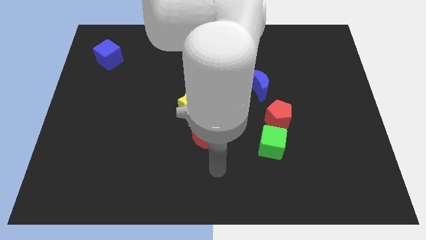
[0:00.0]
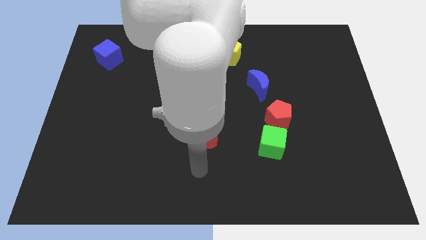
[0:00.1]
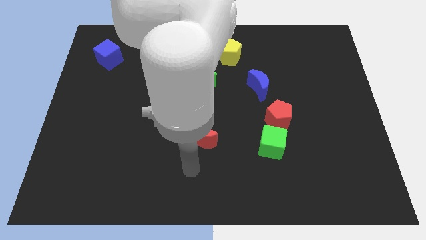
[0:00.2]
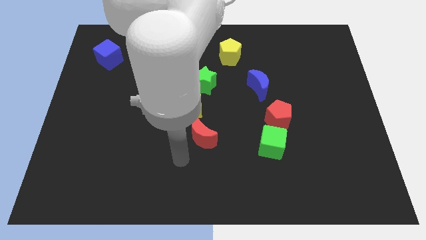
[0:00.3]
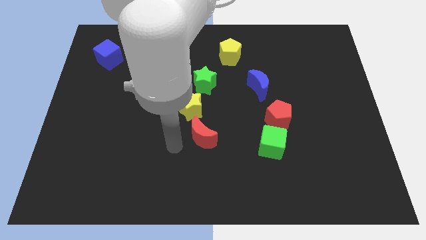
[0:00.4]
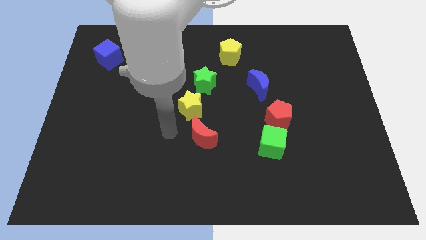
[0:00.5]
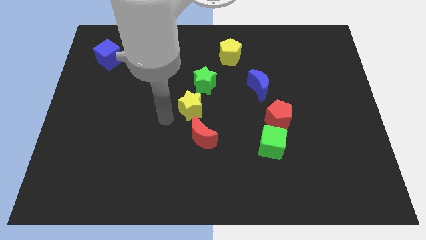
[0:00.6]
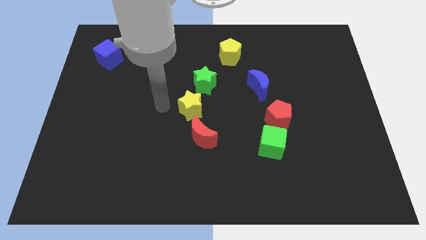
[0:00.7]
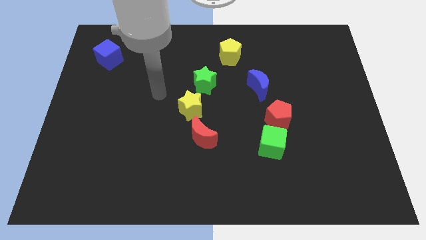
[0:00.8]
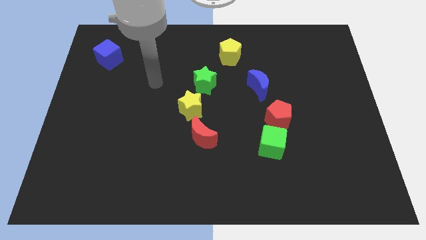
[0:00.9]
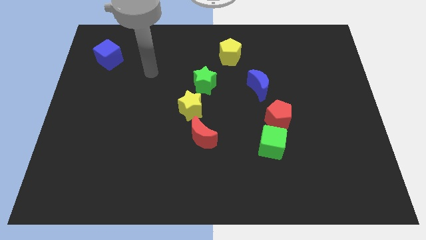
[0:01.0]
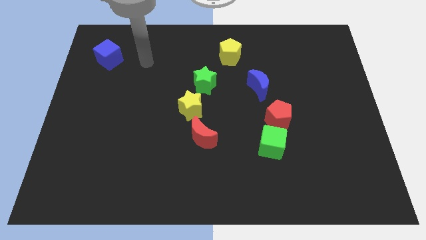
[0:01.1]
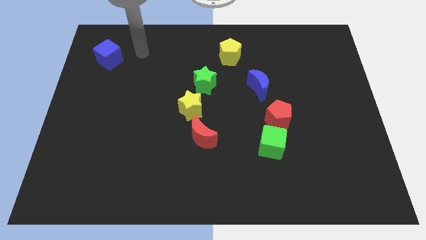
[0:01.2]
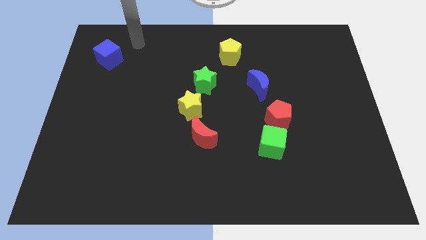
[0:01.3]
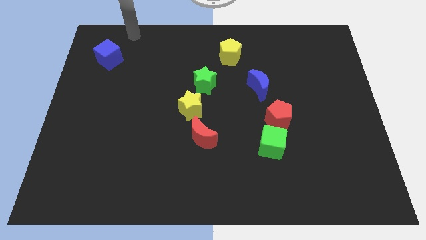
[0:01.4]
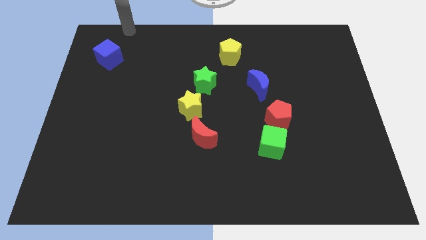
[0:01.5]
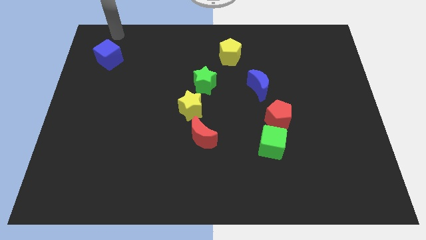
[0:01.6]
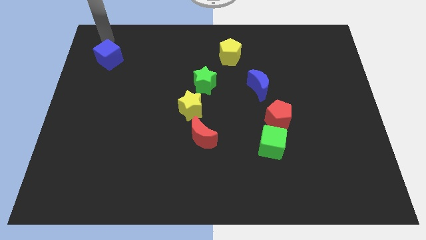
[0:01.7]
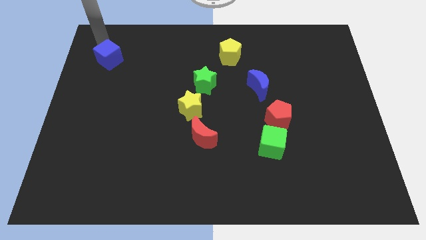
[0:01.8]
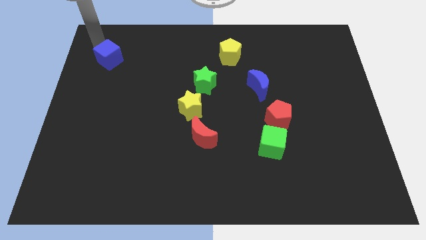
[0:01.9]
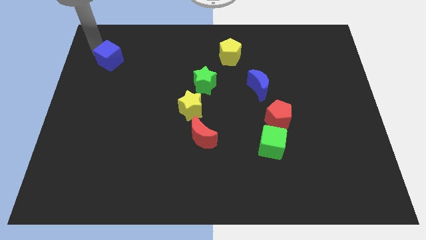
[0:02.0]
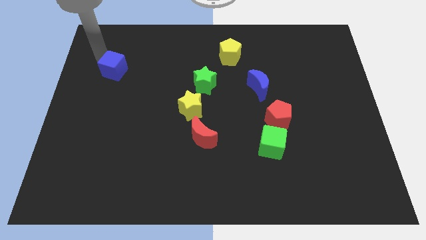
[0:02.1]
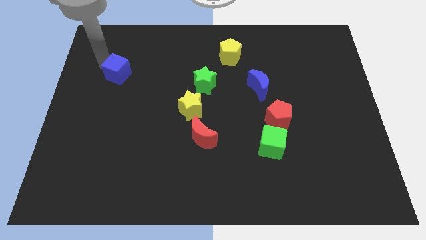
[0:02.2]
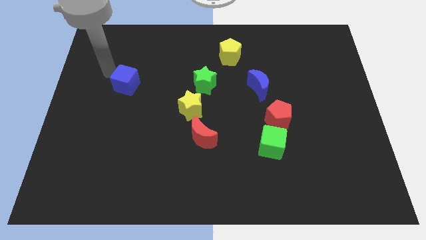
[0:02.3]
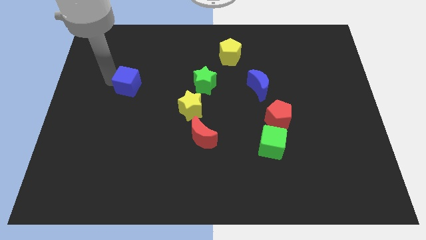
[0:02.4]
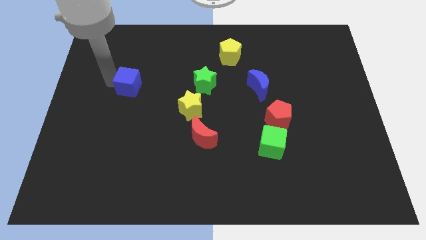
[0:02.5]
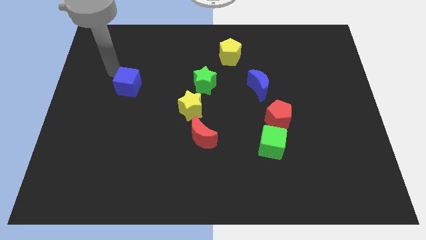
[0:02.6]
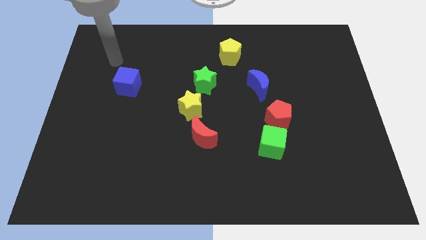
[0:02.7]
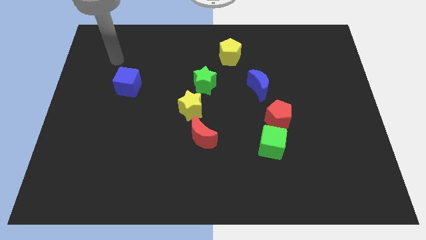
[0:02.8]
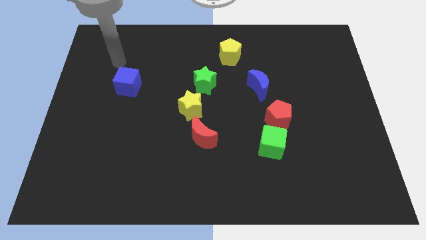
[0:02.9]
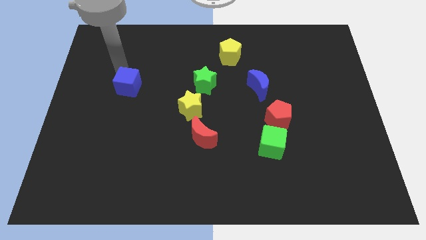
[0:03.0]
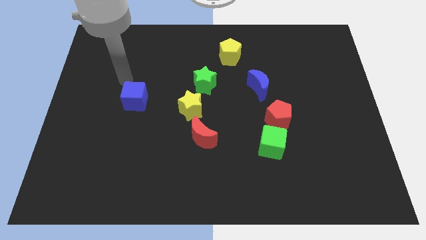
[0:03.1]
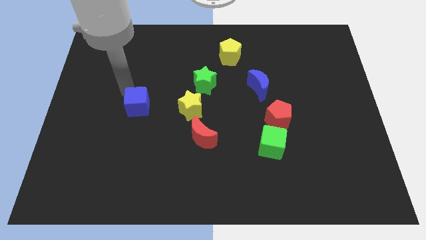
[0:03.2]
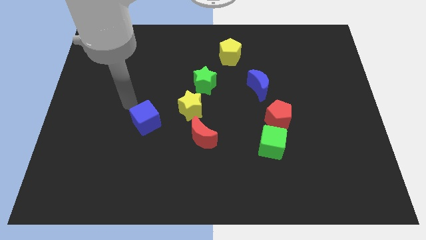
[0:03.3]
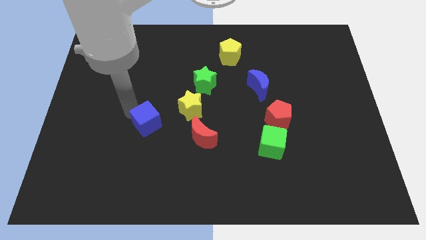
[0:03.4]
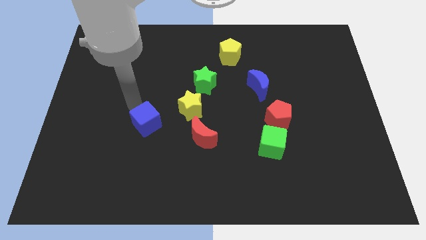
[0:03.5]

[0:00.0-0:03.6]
push the blue cube to the left of the yellow star

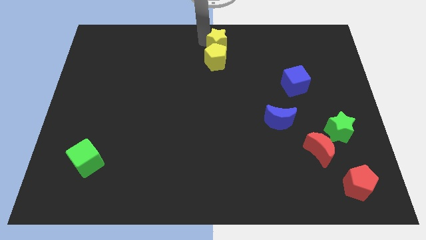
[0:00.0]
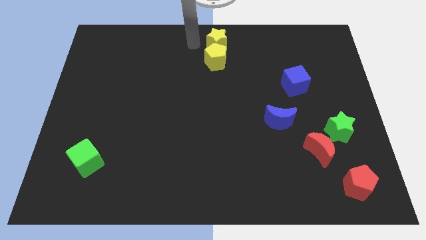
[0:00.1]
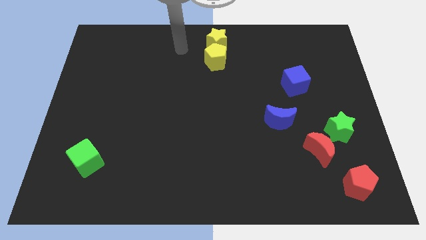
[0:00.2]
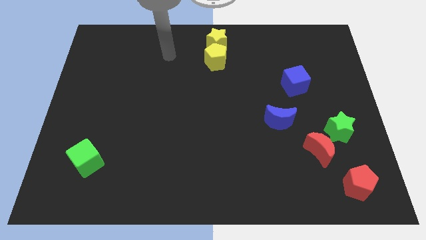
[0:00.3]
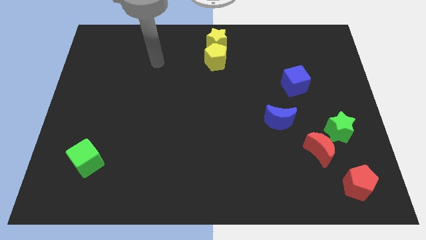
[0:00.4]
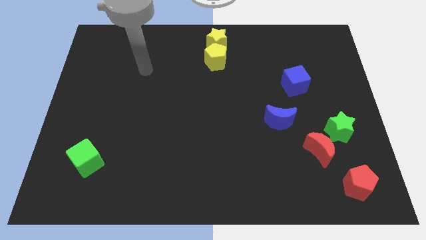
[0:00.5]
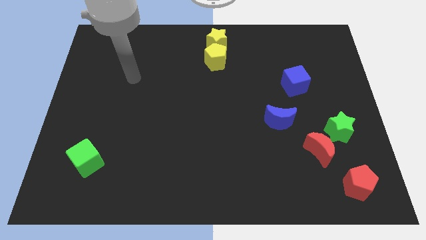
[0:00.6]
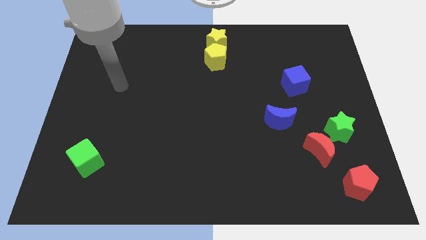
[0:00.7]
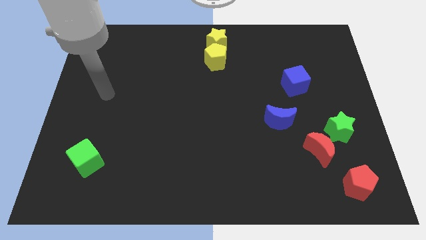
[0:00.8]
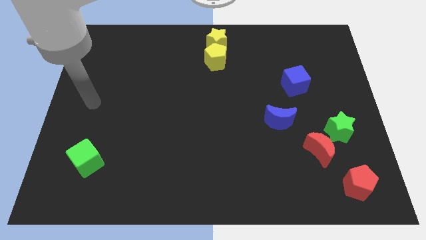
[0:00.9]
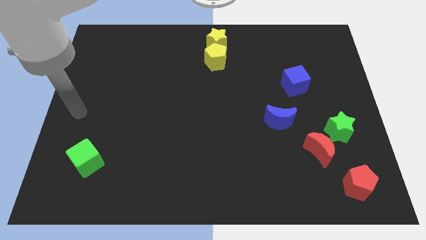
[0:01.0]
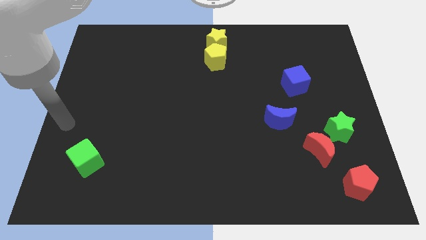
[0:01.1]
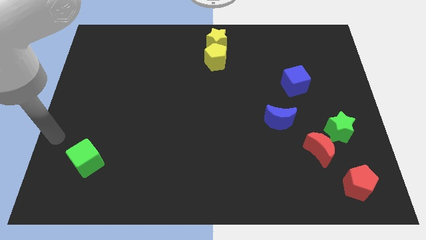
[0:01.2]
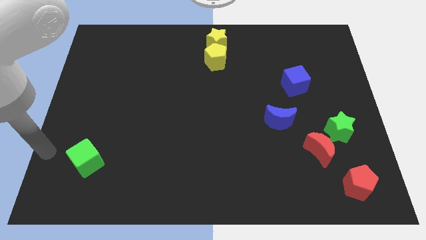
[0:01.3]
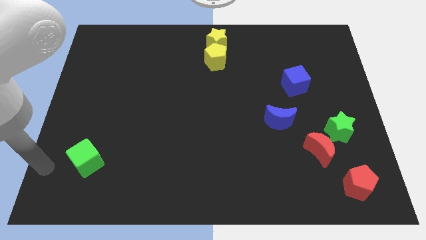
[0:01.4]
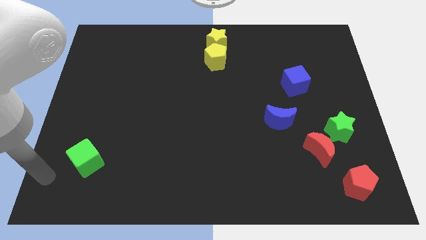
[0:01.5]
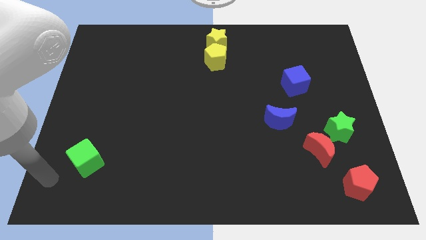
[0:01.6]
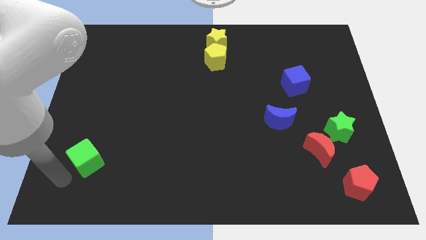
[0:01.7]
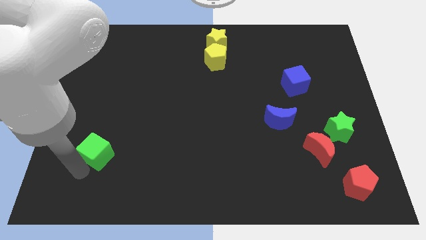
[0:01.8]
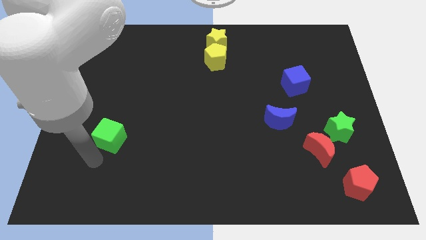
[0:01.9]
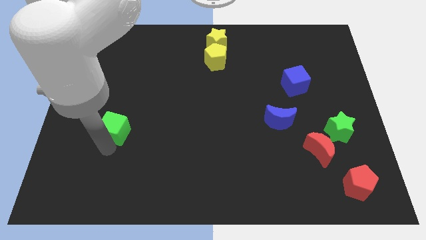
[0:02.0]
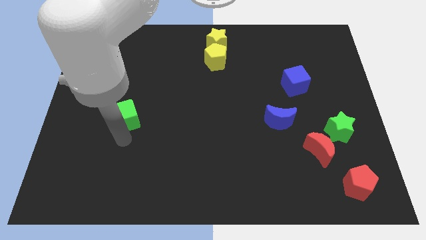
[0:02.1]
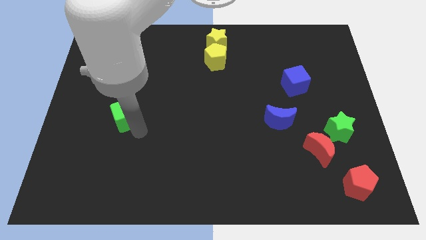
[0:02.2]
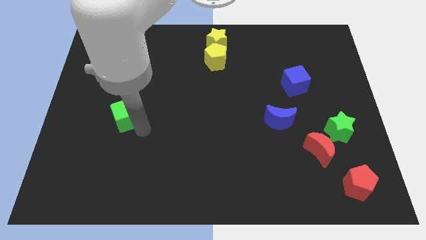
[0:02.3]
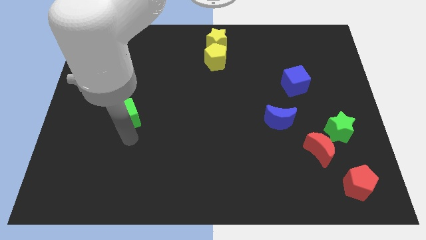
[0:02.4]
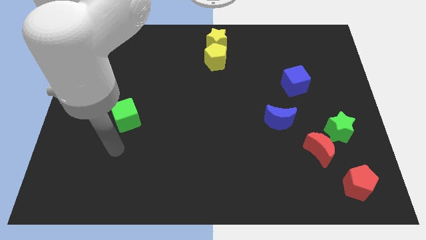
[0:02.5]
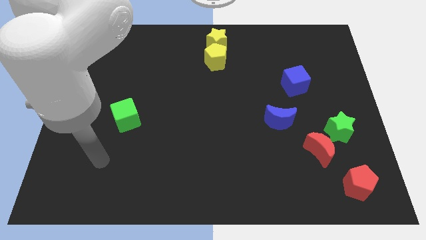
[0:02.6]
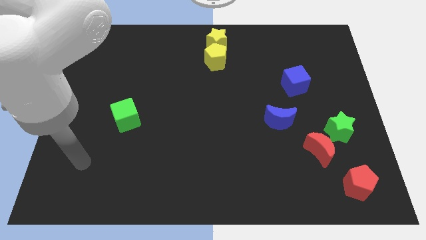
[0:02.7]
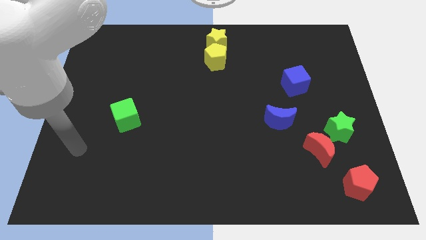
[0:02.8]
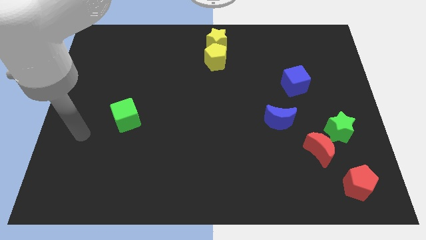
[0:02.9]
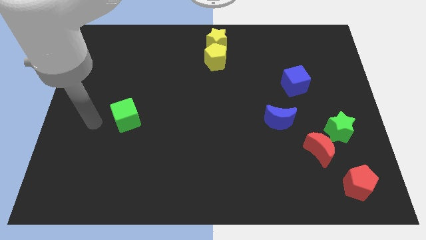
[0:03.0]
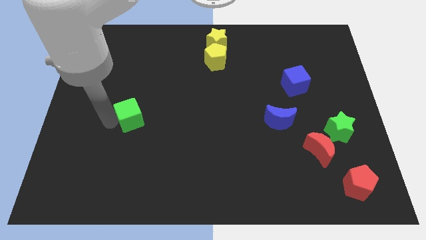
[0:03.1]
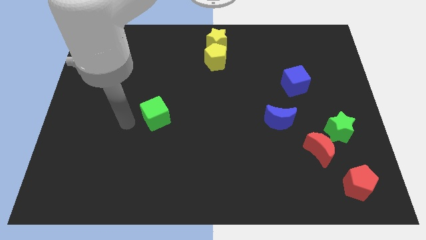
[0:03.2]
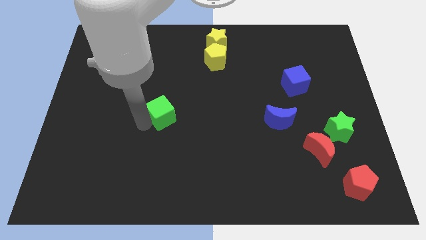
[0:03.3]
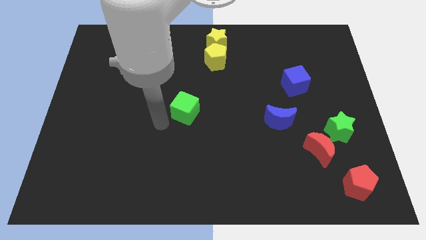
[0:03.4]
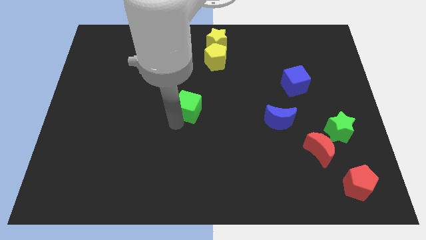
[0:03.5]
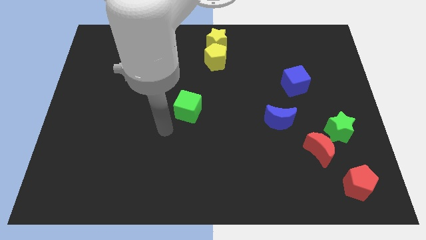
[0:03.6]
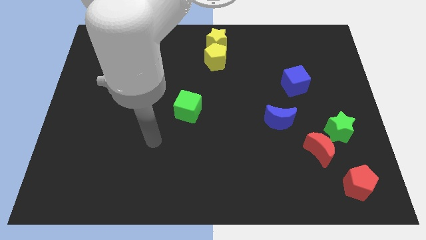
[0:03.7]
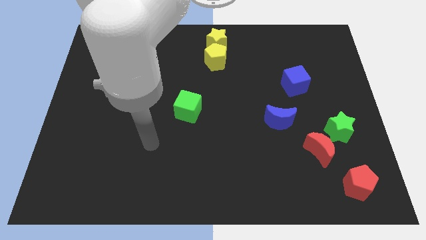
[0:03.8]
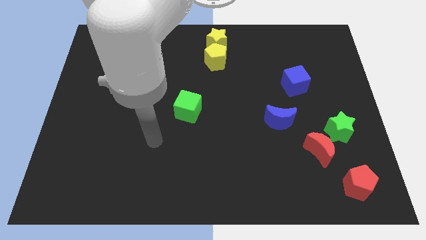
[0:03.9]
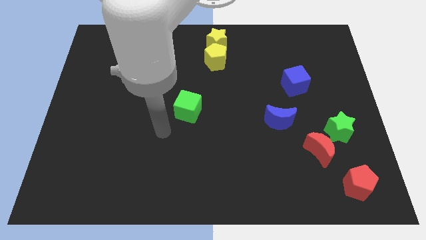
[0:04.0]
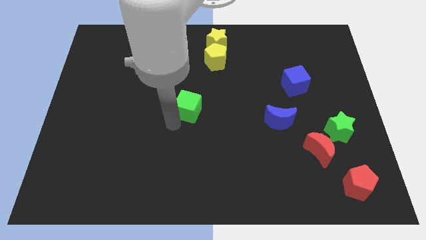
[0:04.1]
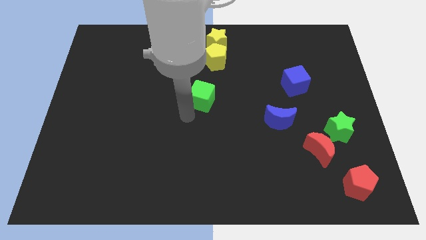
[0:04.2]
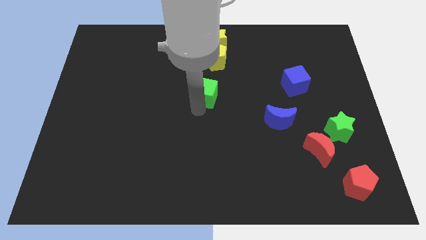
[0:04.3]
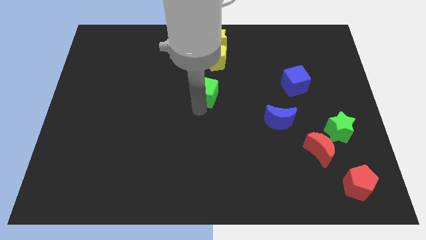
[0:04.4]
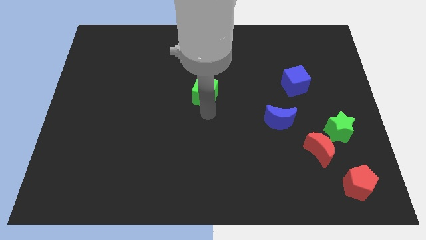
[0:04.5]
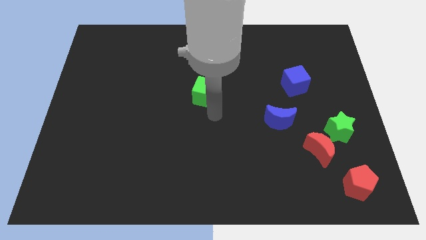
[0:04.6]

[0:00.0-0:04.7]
move the green cube diagonally top left to the blue moon

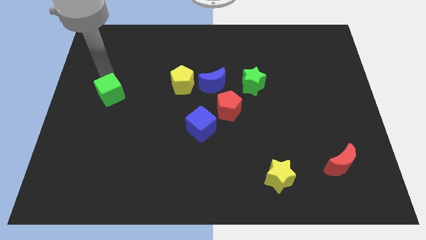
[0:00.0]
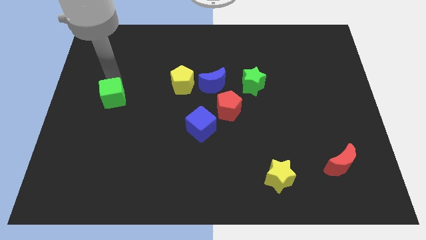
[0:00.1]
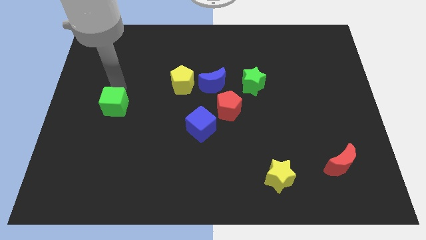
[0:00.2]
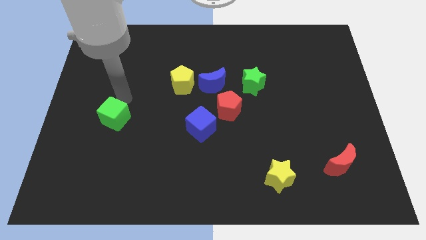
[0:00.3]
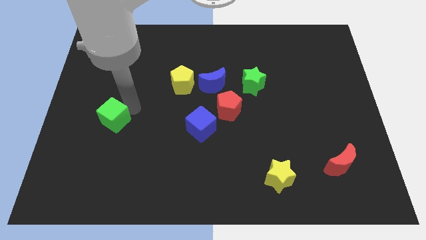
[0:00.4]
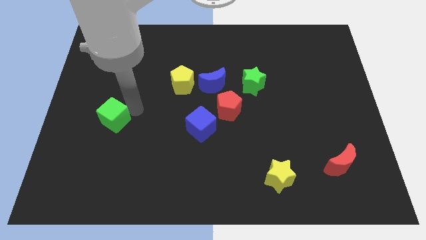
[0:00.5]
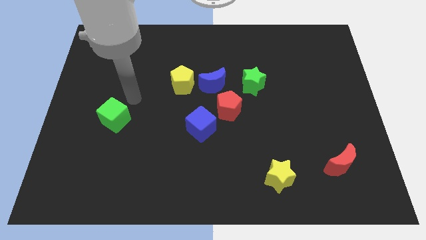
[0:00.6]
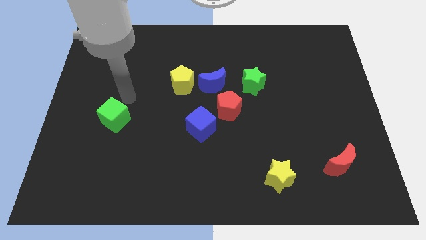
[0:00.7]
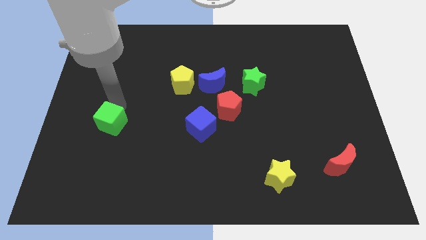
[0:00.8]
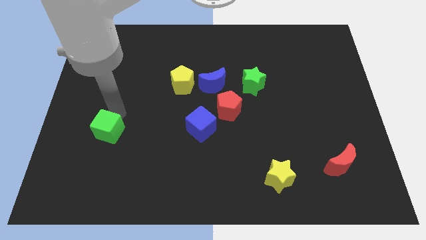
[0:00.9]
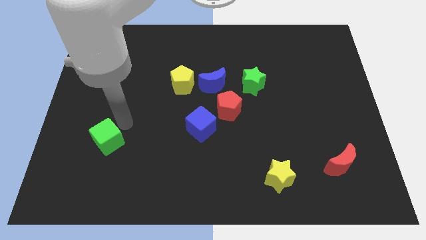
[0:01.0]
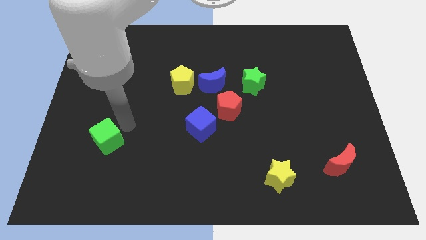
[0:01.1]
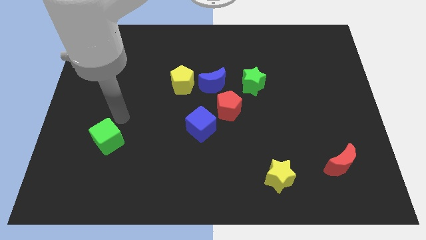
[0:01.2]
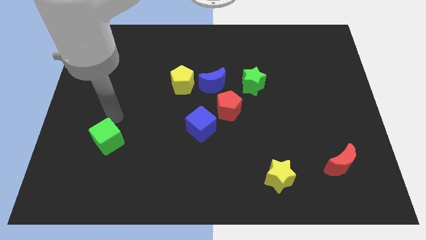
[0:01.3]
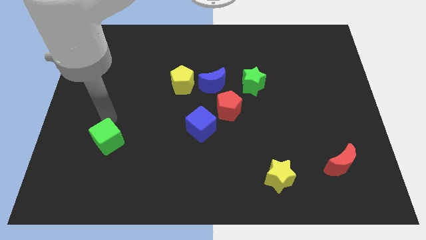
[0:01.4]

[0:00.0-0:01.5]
push the green cube towards bottom
